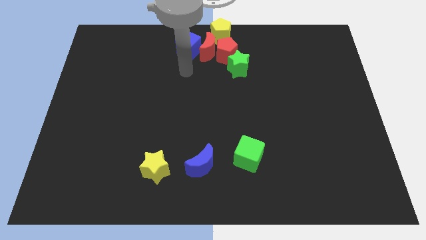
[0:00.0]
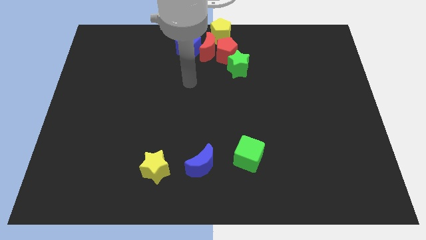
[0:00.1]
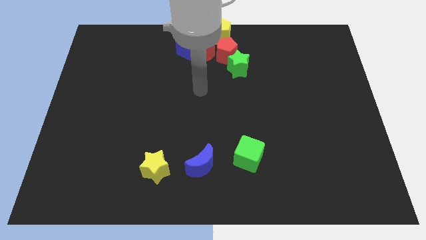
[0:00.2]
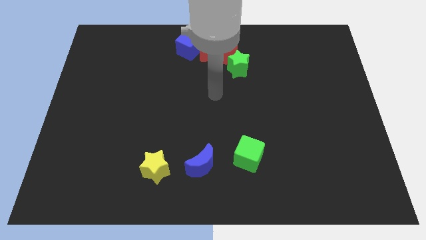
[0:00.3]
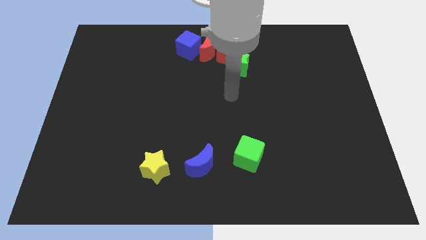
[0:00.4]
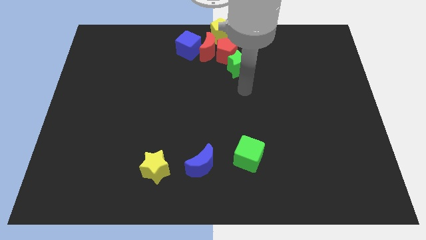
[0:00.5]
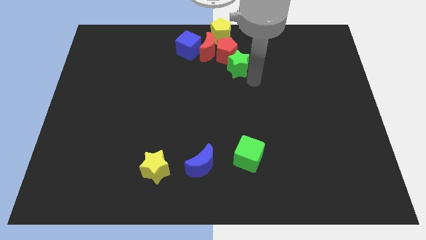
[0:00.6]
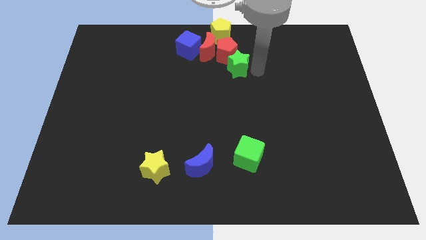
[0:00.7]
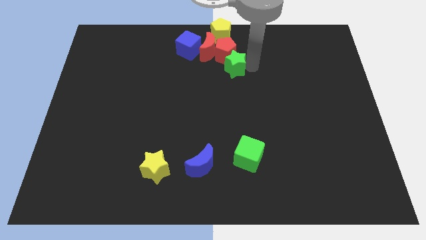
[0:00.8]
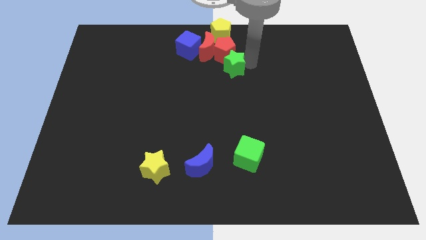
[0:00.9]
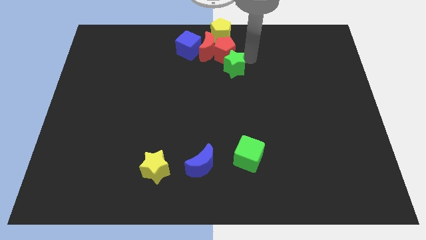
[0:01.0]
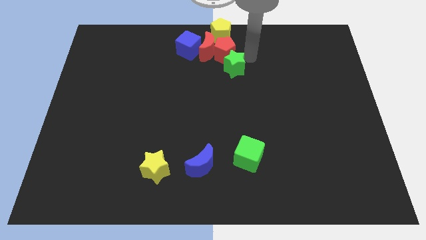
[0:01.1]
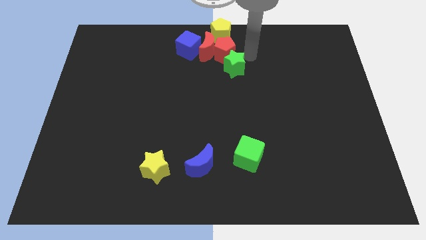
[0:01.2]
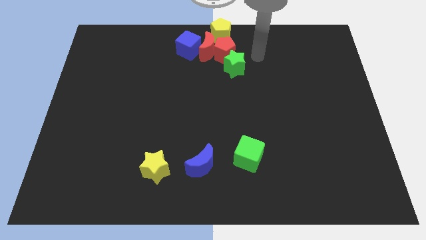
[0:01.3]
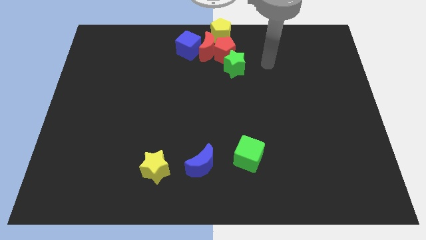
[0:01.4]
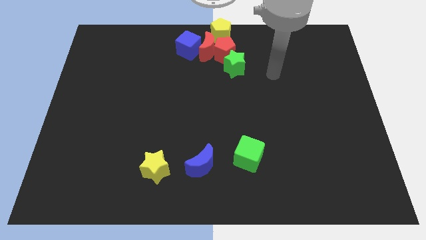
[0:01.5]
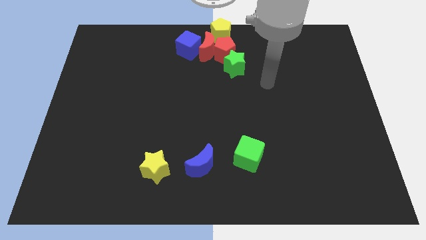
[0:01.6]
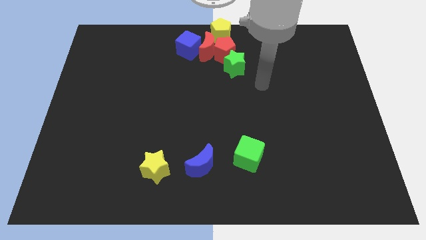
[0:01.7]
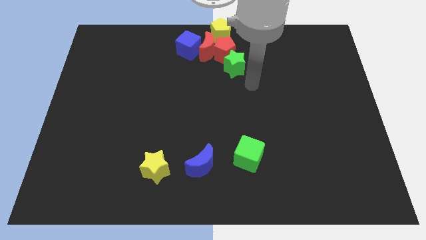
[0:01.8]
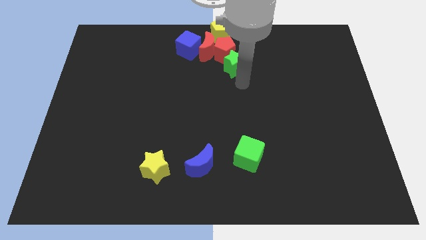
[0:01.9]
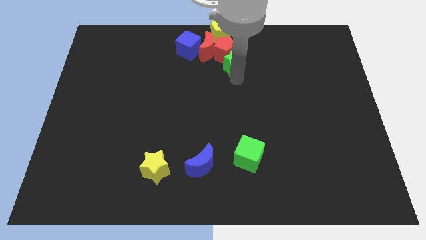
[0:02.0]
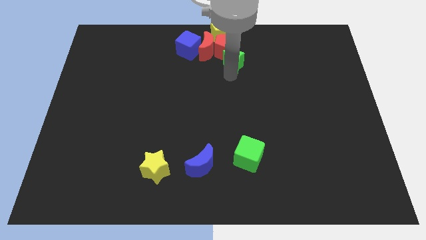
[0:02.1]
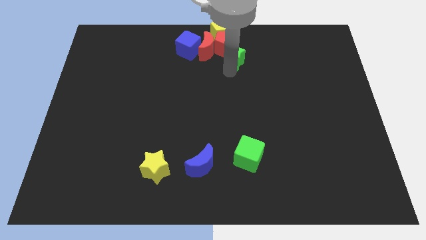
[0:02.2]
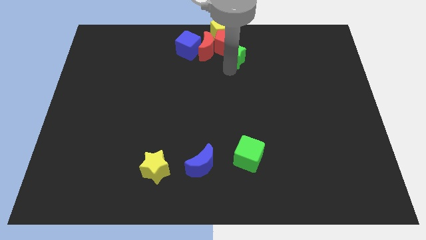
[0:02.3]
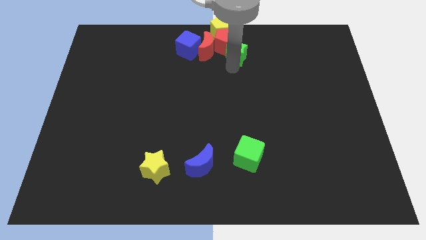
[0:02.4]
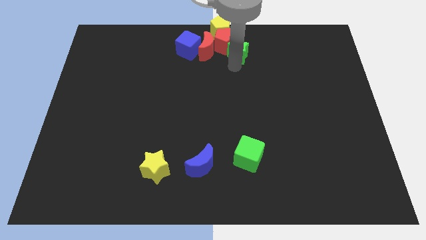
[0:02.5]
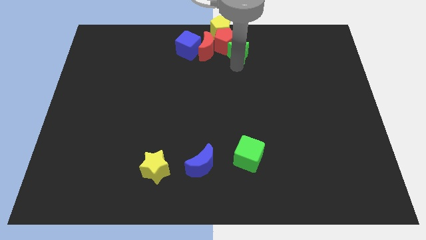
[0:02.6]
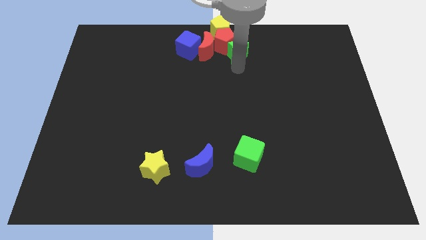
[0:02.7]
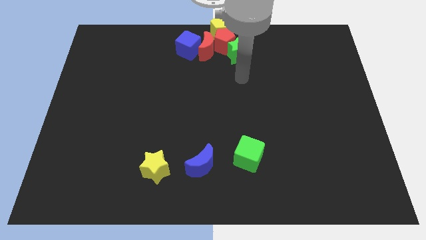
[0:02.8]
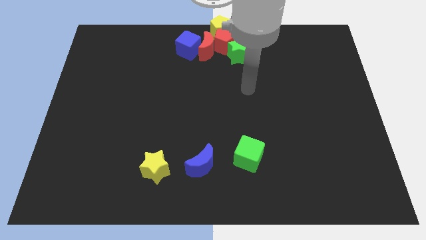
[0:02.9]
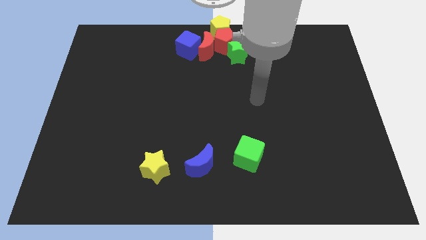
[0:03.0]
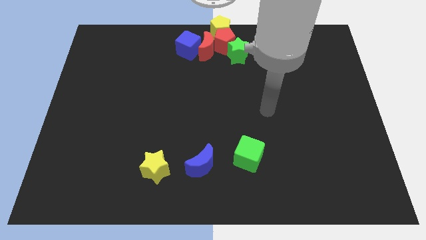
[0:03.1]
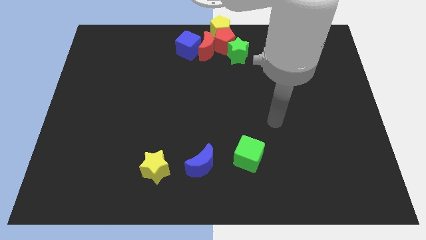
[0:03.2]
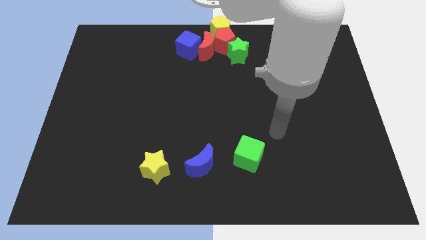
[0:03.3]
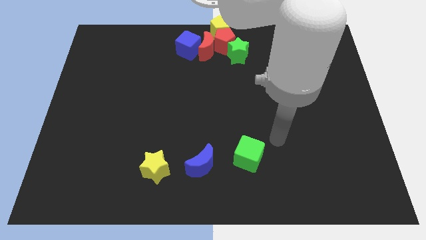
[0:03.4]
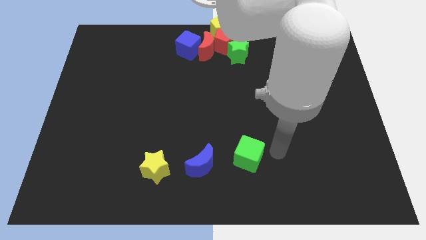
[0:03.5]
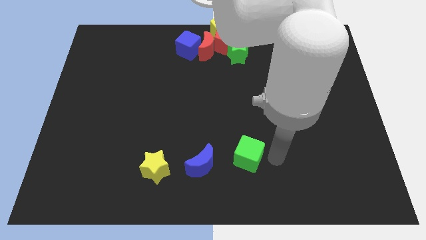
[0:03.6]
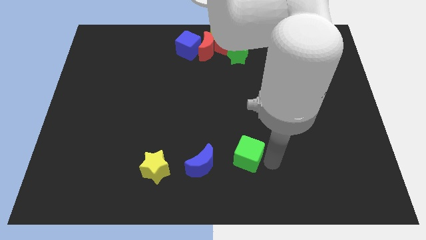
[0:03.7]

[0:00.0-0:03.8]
adjust the group of blocks at the center of the board

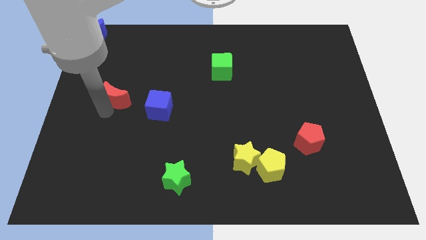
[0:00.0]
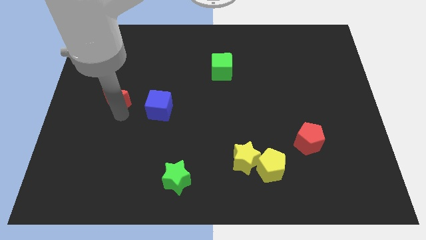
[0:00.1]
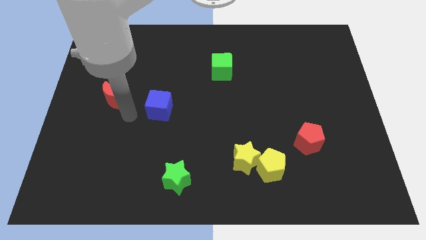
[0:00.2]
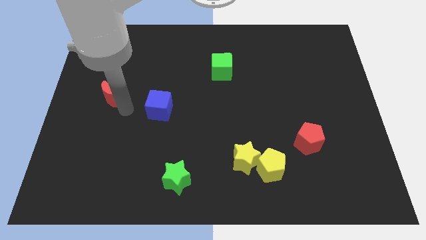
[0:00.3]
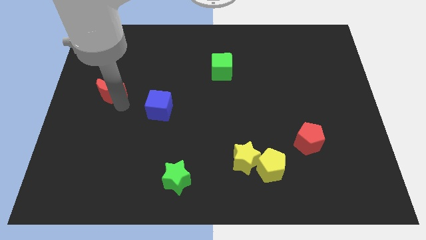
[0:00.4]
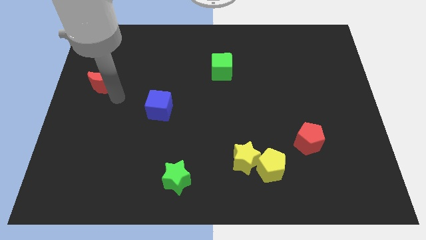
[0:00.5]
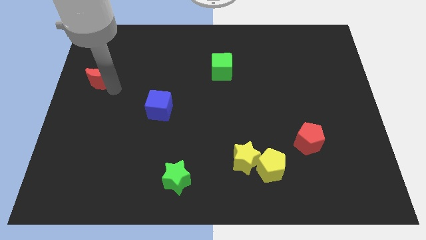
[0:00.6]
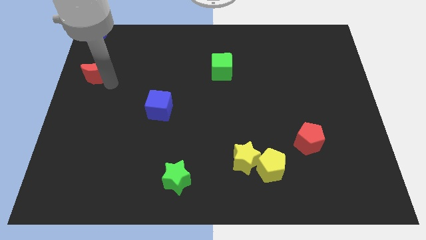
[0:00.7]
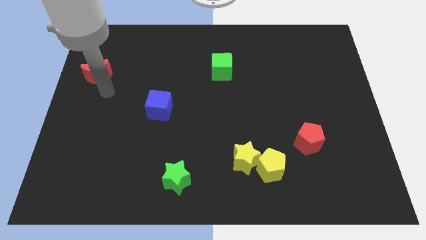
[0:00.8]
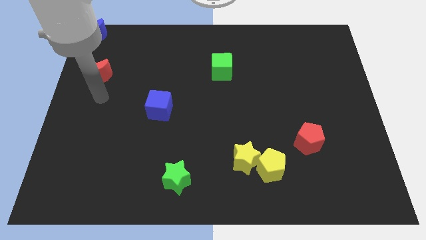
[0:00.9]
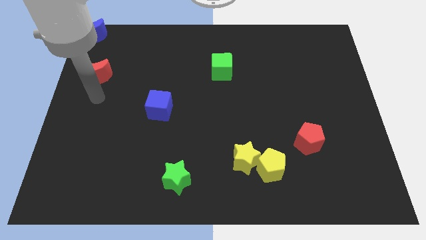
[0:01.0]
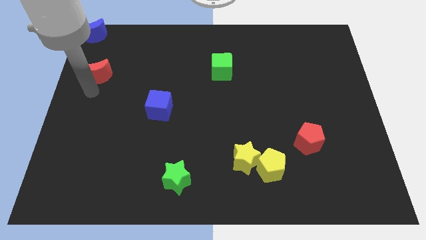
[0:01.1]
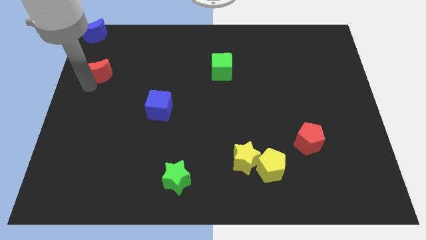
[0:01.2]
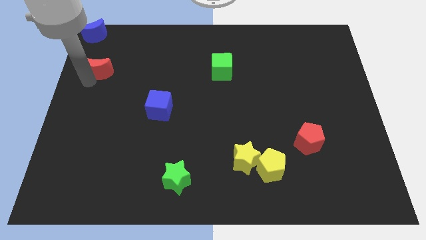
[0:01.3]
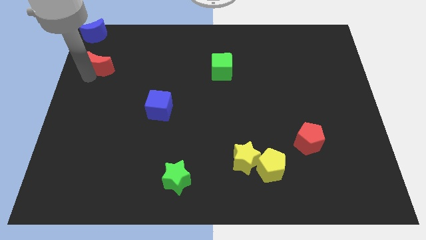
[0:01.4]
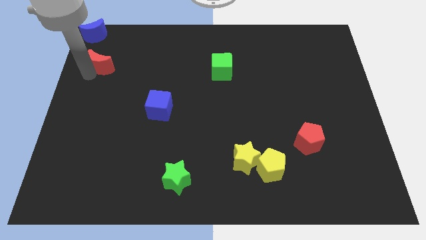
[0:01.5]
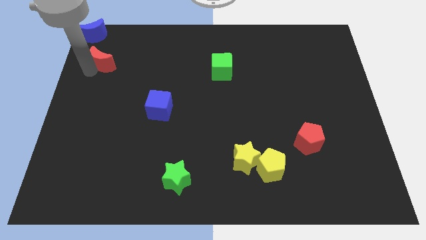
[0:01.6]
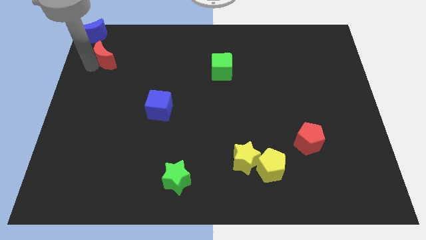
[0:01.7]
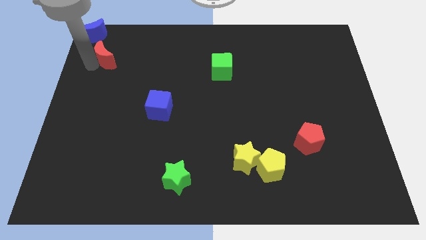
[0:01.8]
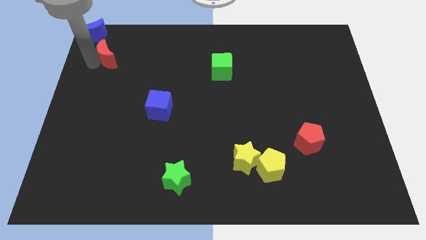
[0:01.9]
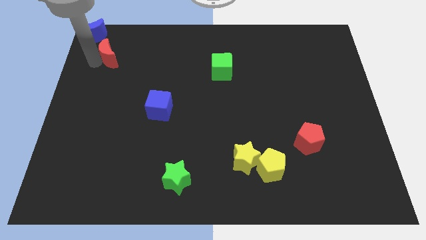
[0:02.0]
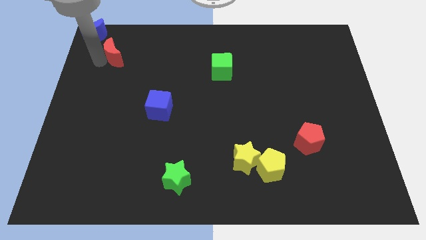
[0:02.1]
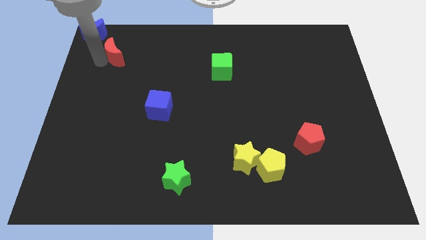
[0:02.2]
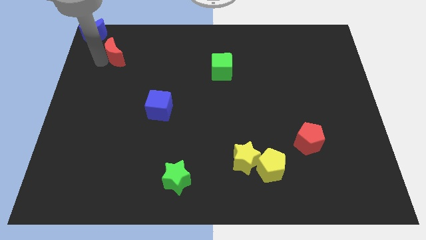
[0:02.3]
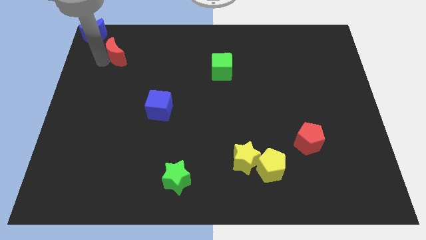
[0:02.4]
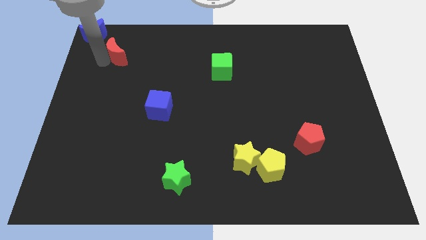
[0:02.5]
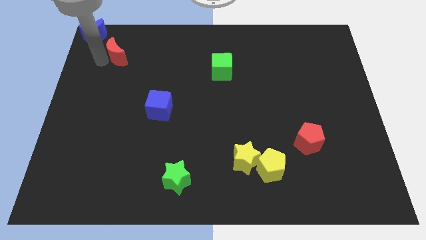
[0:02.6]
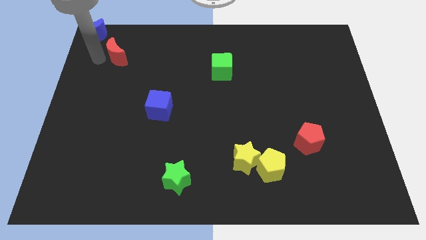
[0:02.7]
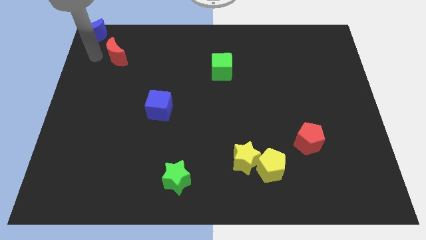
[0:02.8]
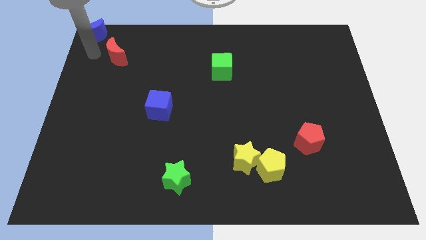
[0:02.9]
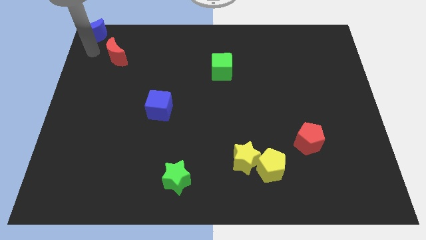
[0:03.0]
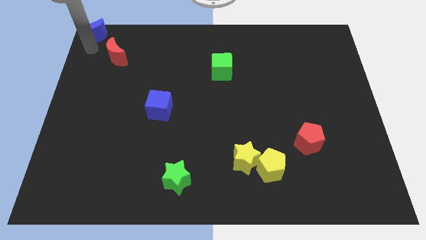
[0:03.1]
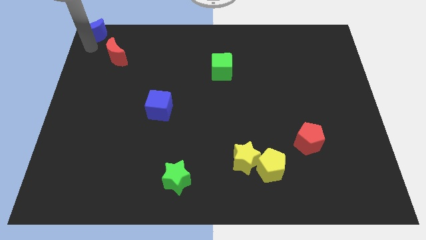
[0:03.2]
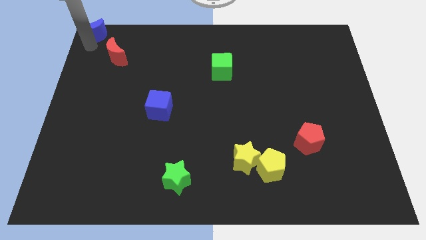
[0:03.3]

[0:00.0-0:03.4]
move the red crescent to the bottom right side of the blue crescent

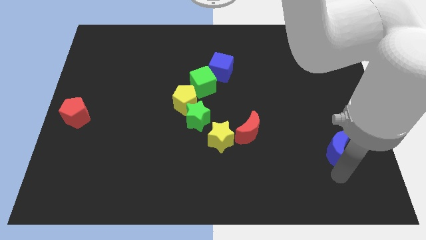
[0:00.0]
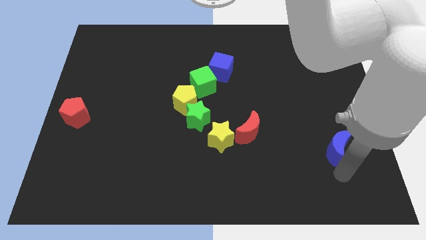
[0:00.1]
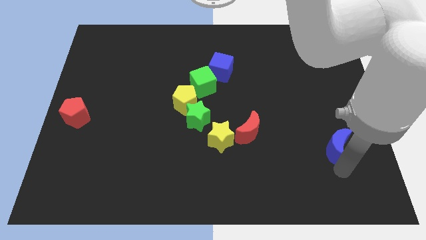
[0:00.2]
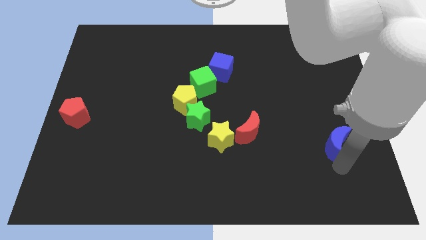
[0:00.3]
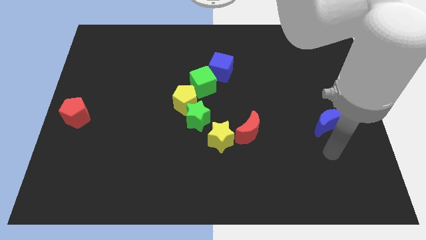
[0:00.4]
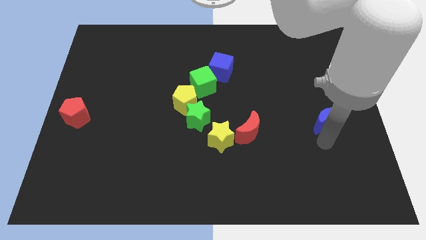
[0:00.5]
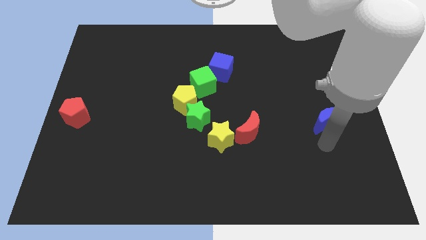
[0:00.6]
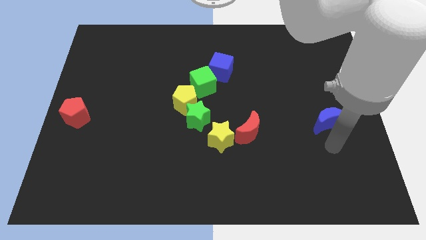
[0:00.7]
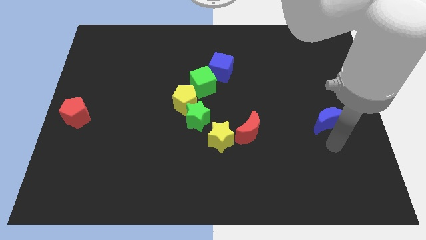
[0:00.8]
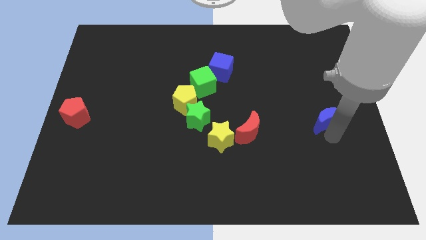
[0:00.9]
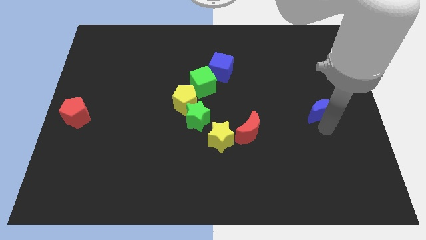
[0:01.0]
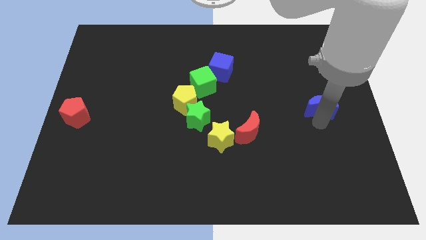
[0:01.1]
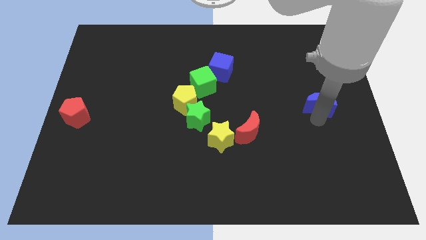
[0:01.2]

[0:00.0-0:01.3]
move blue moon slightly upwards

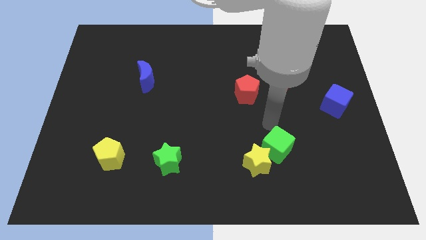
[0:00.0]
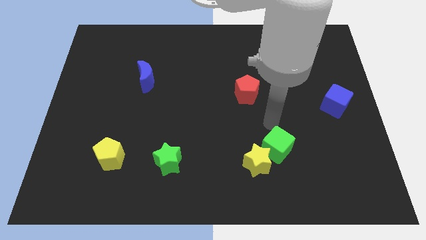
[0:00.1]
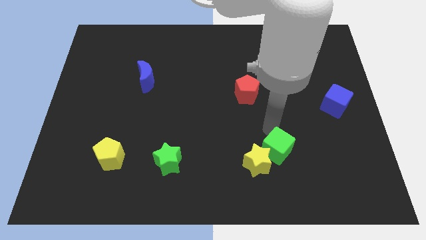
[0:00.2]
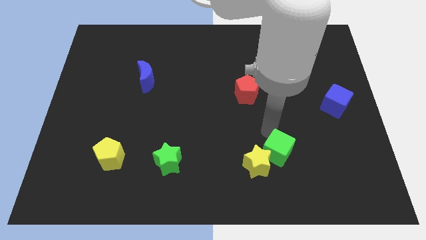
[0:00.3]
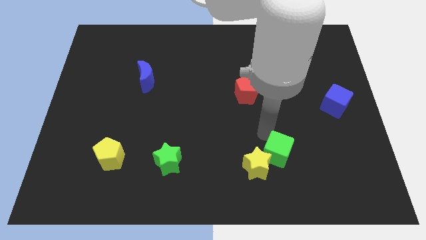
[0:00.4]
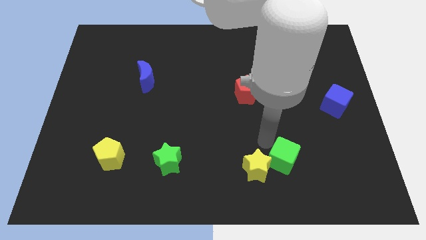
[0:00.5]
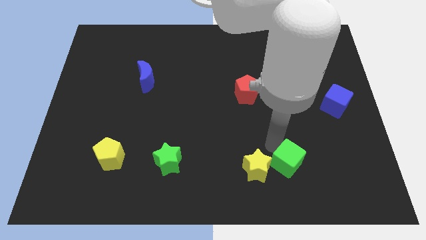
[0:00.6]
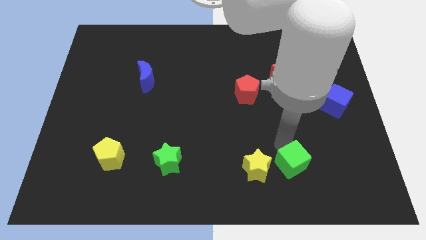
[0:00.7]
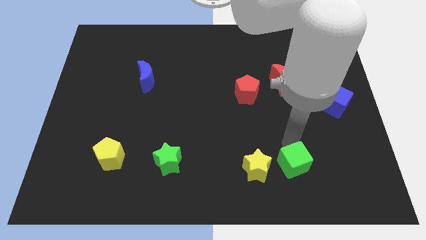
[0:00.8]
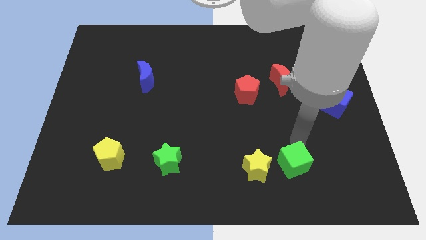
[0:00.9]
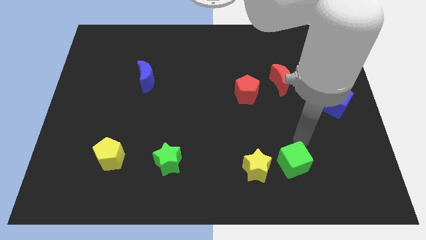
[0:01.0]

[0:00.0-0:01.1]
push the green cube to the right of the yellow star
